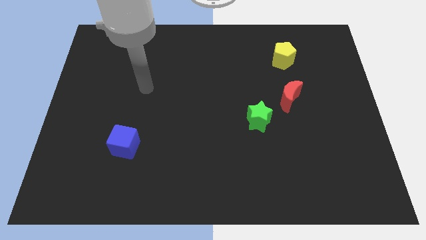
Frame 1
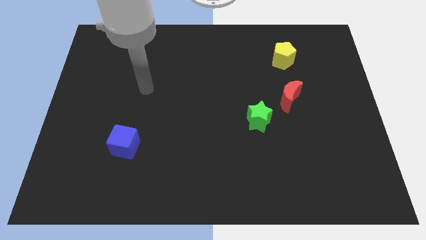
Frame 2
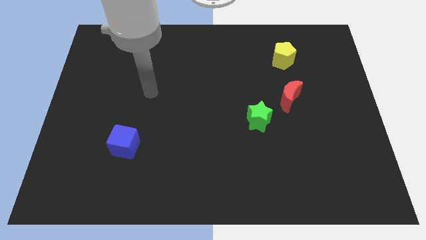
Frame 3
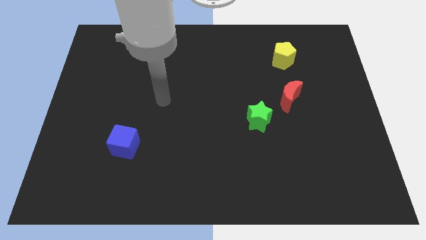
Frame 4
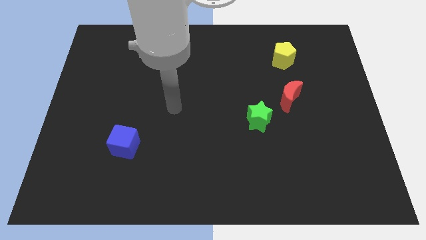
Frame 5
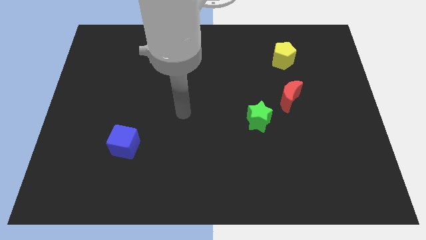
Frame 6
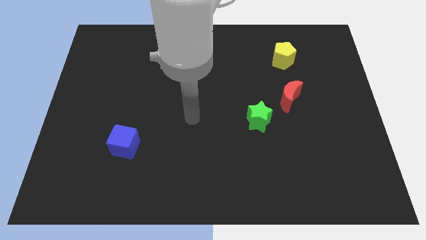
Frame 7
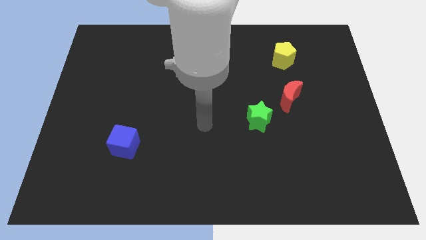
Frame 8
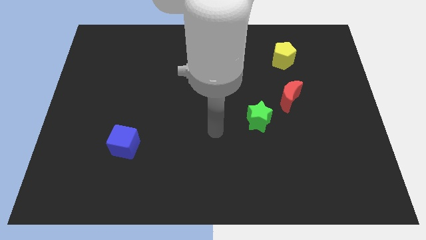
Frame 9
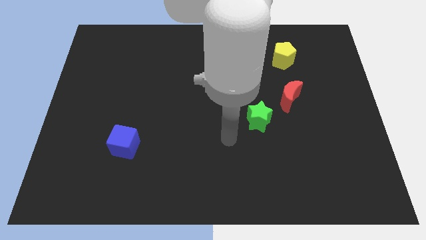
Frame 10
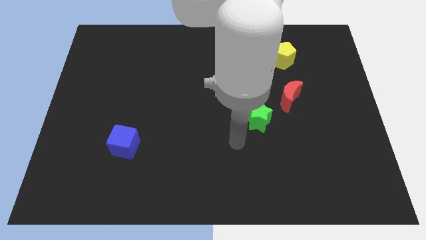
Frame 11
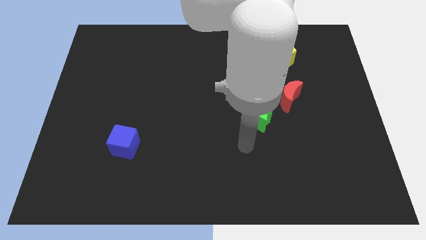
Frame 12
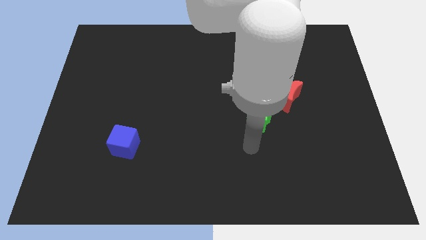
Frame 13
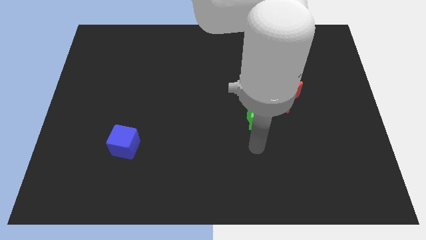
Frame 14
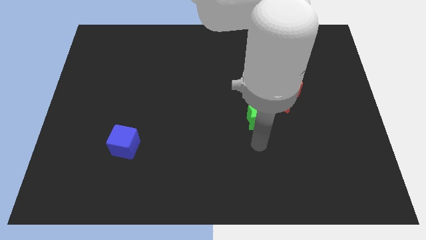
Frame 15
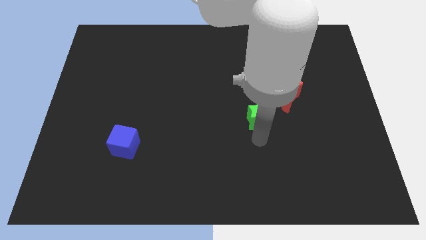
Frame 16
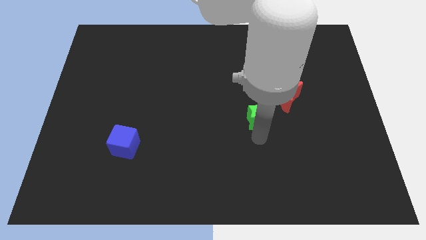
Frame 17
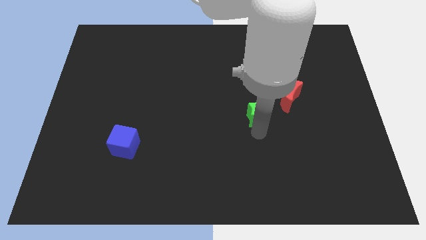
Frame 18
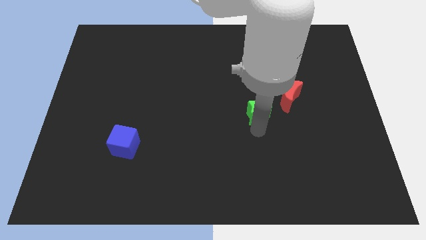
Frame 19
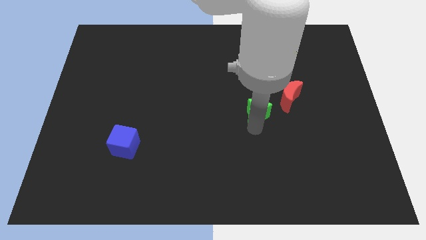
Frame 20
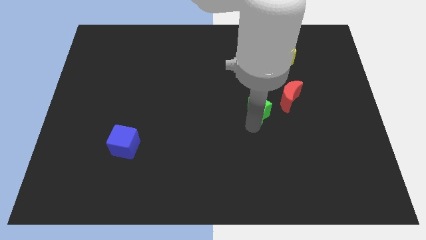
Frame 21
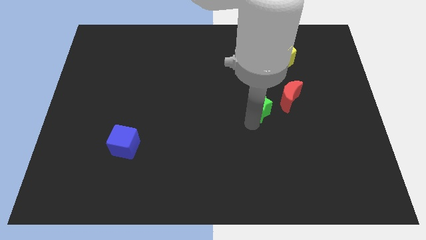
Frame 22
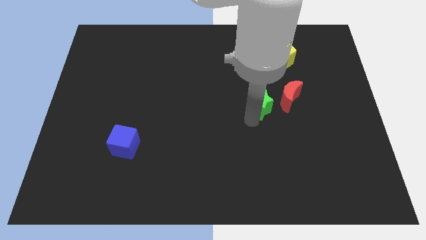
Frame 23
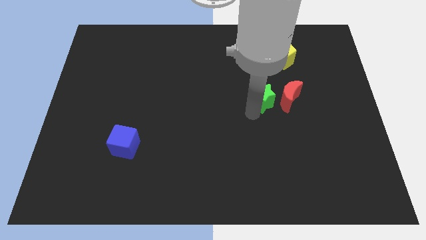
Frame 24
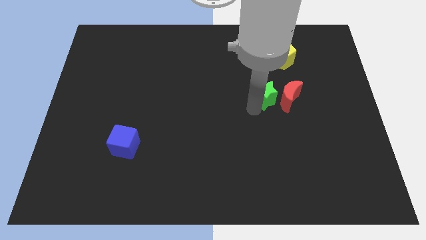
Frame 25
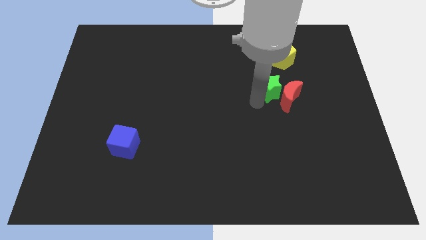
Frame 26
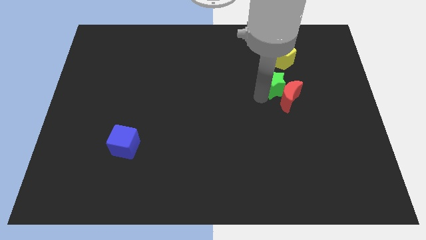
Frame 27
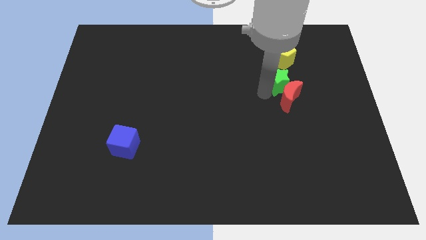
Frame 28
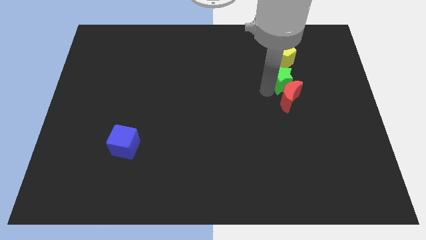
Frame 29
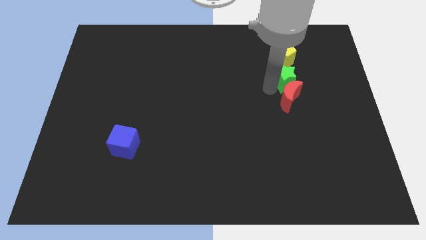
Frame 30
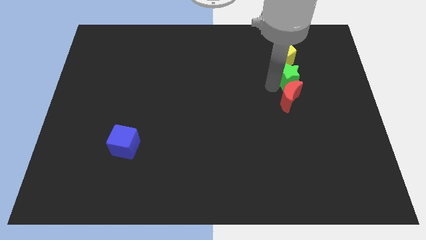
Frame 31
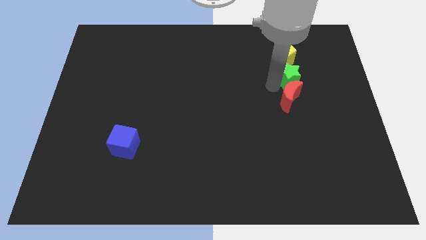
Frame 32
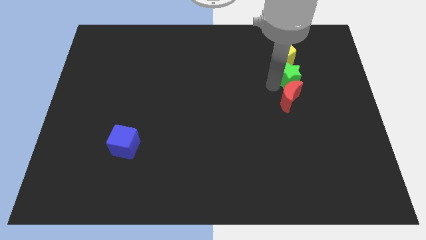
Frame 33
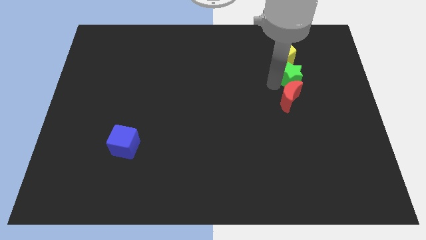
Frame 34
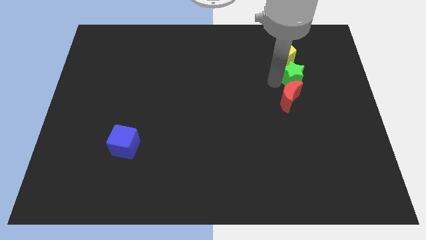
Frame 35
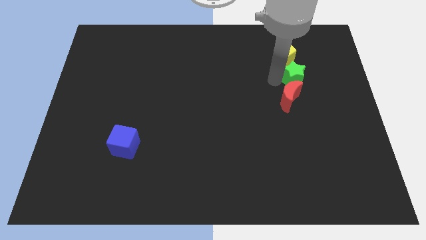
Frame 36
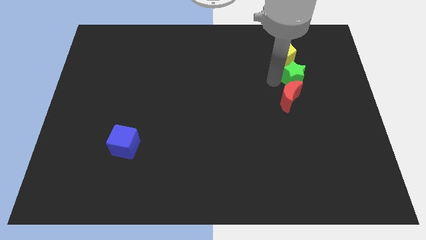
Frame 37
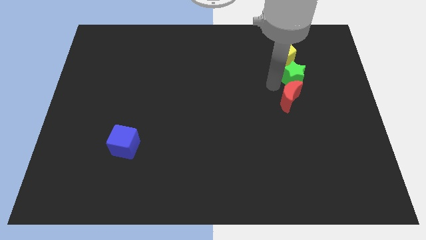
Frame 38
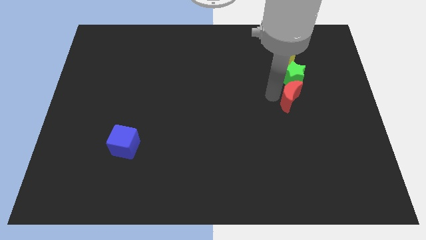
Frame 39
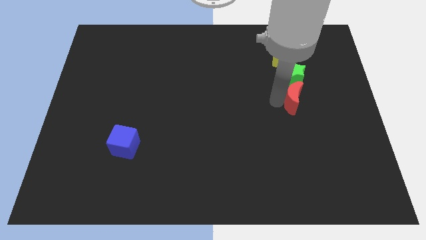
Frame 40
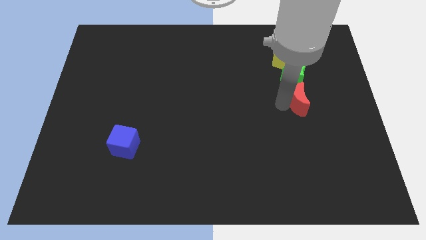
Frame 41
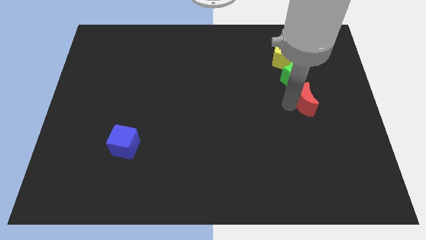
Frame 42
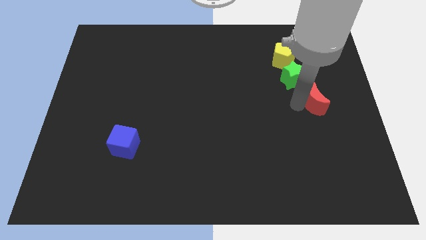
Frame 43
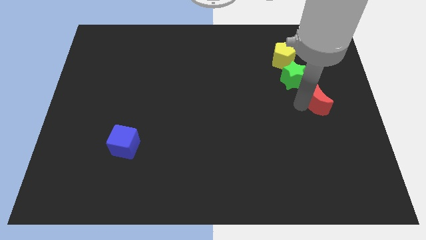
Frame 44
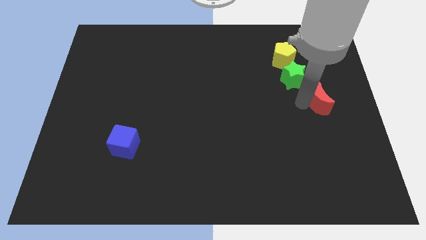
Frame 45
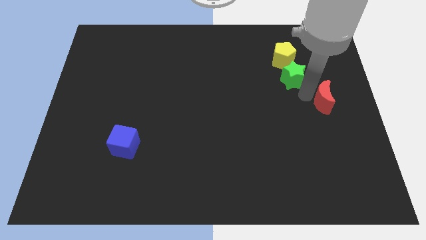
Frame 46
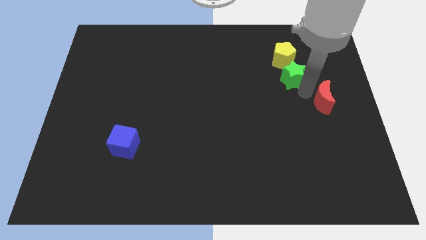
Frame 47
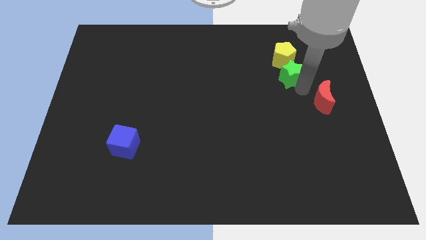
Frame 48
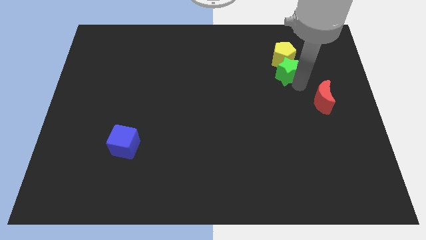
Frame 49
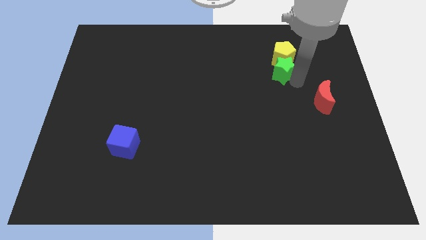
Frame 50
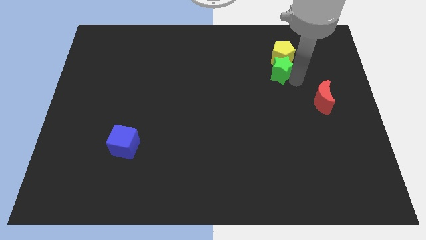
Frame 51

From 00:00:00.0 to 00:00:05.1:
move the star to the yellow block

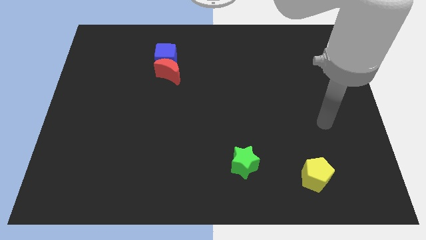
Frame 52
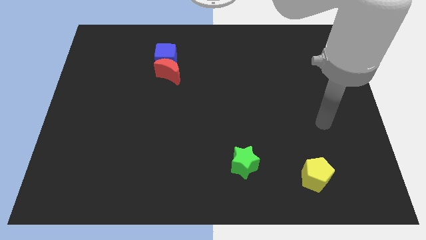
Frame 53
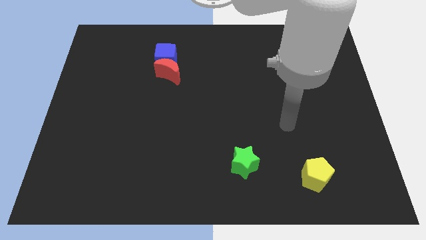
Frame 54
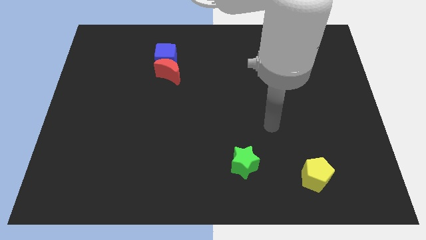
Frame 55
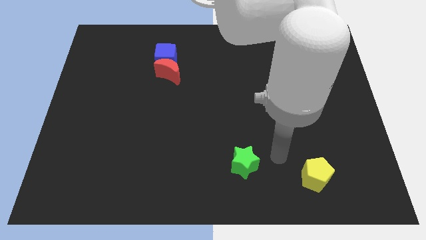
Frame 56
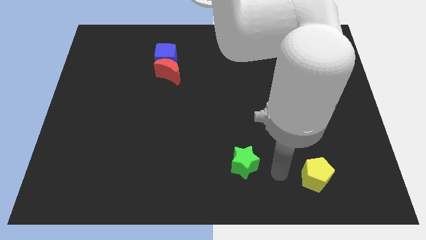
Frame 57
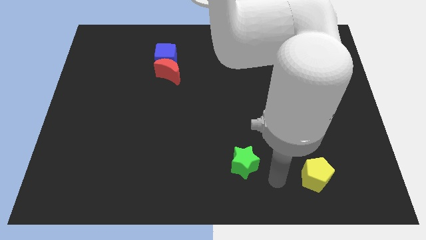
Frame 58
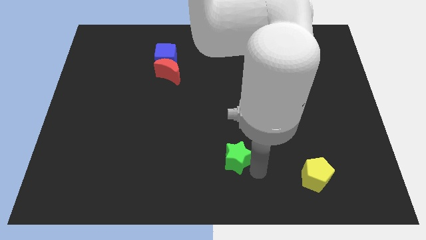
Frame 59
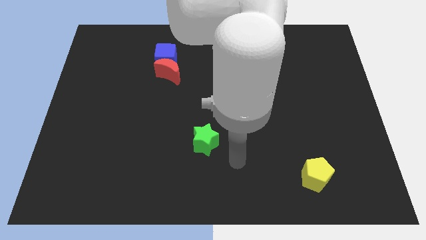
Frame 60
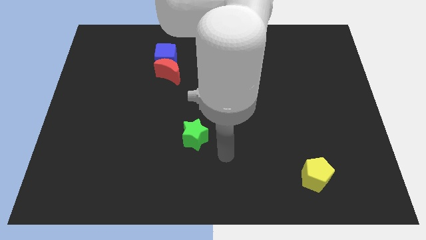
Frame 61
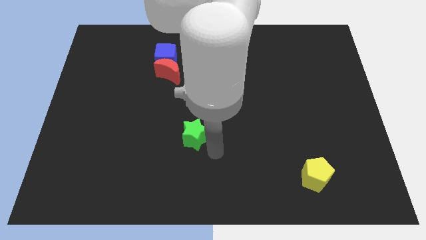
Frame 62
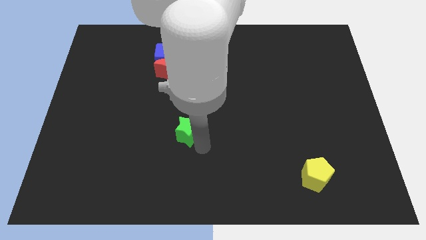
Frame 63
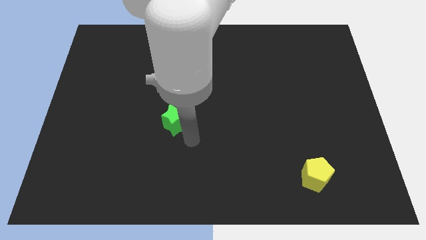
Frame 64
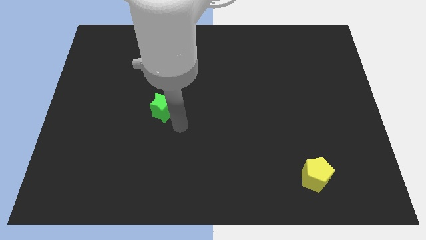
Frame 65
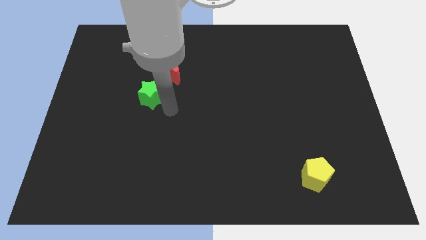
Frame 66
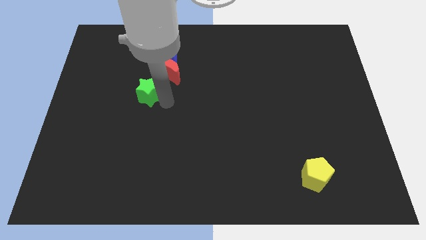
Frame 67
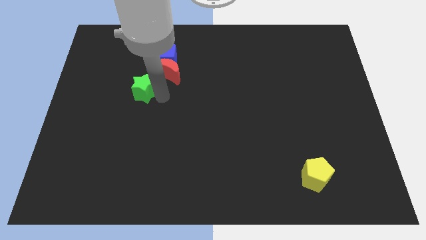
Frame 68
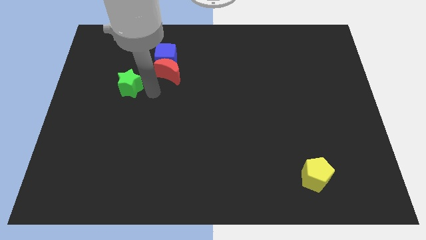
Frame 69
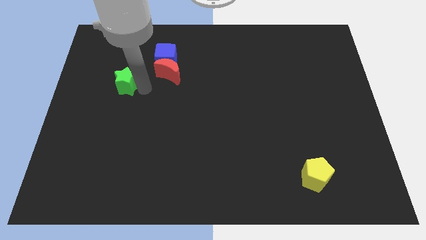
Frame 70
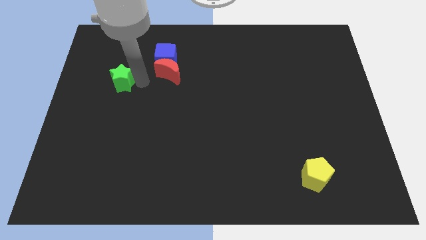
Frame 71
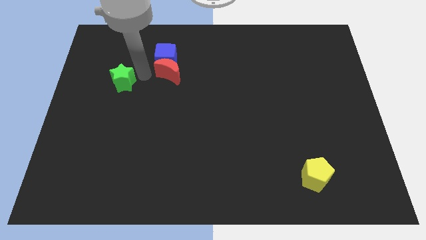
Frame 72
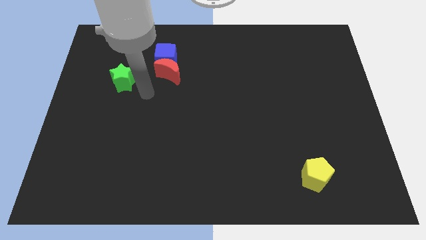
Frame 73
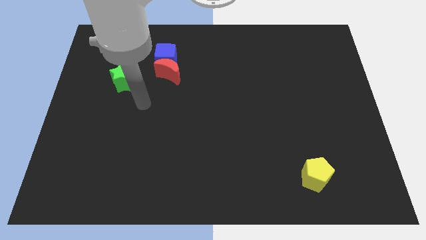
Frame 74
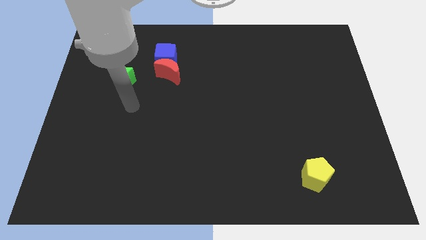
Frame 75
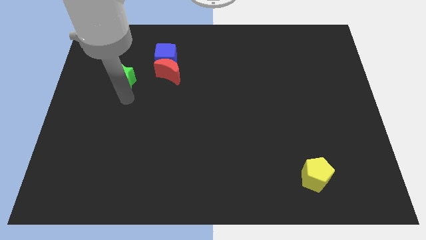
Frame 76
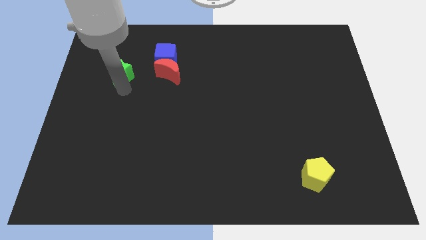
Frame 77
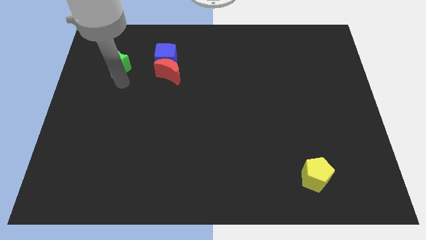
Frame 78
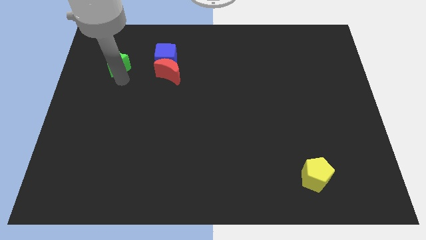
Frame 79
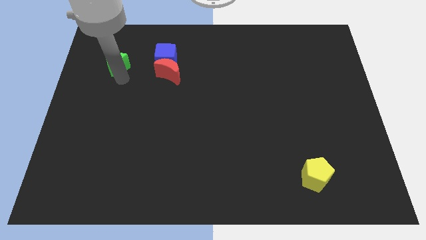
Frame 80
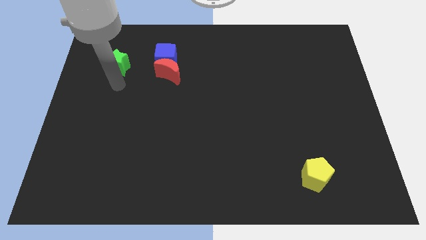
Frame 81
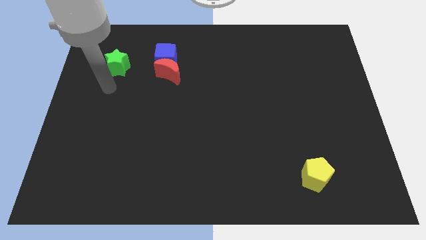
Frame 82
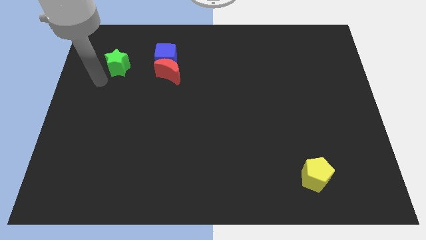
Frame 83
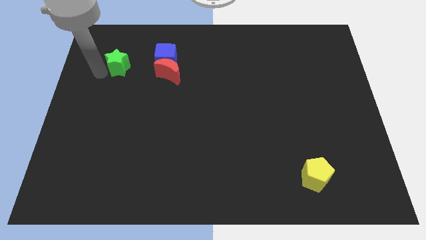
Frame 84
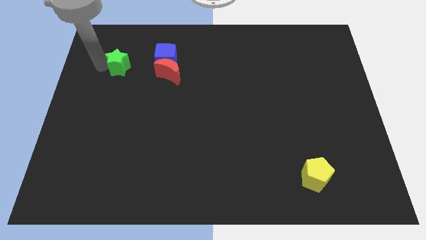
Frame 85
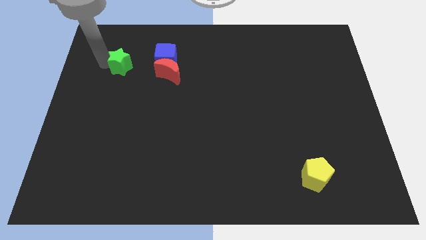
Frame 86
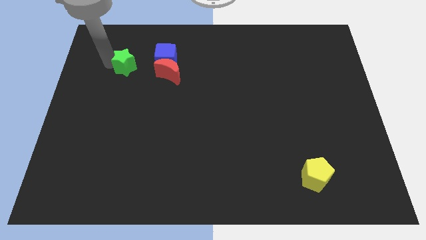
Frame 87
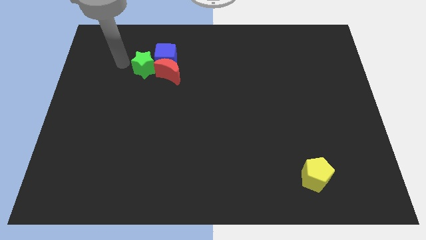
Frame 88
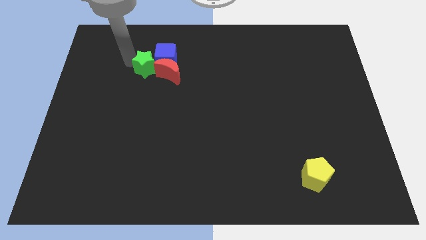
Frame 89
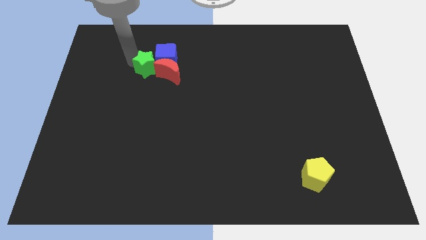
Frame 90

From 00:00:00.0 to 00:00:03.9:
move the green star close to the blue cube
